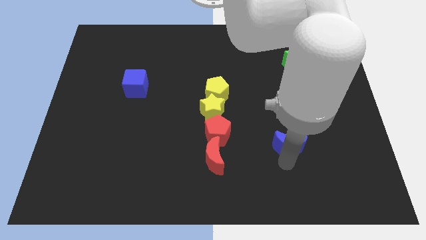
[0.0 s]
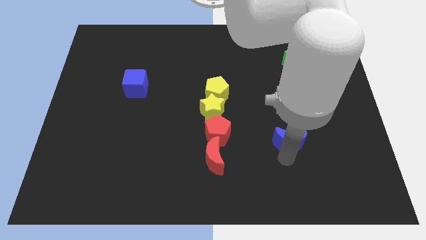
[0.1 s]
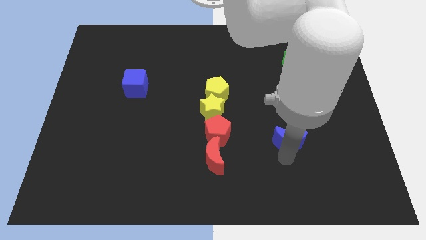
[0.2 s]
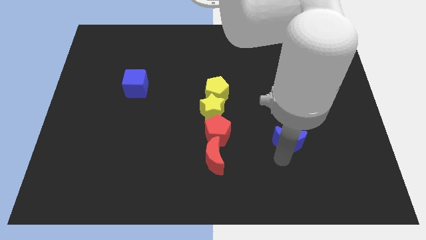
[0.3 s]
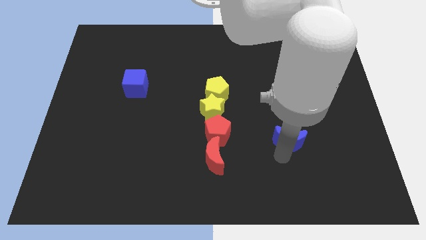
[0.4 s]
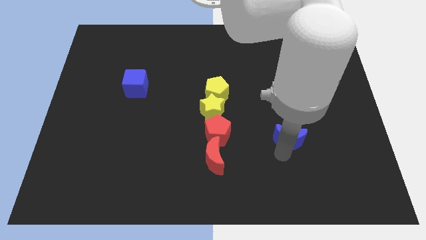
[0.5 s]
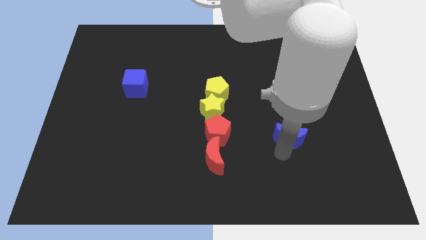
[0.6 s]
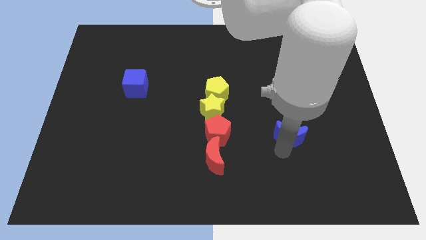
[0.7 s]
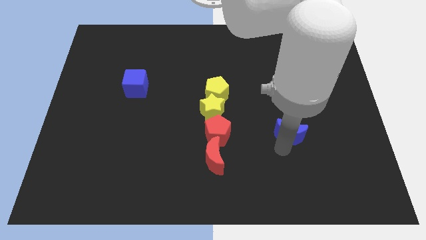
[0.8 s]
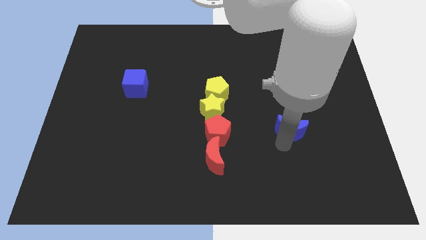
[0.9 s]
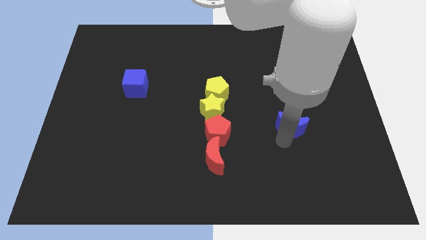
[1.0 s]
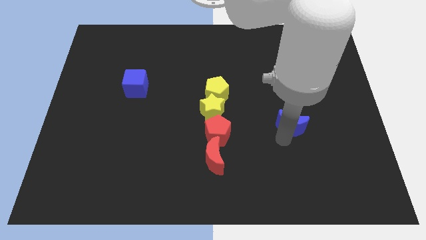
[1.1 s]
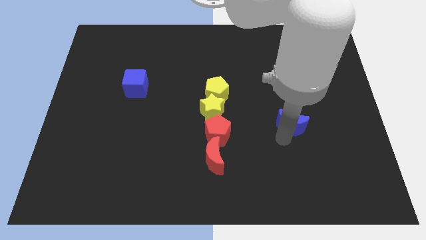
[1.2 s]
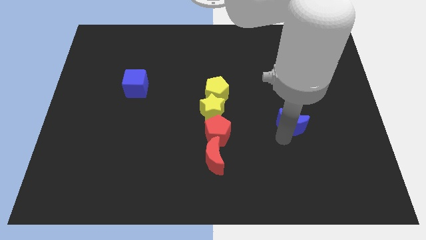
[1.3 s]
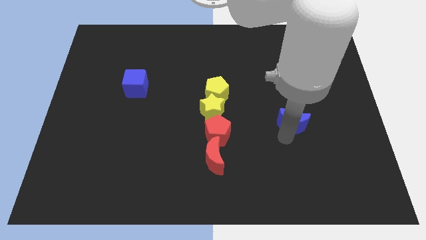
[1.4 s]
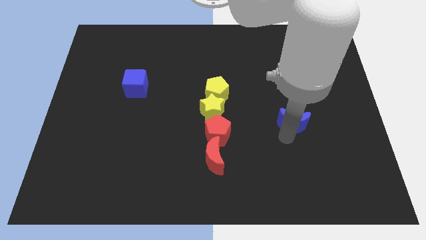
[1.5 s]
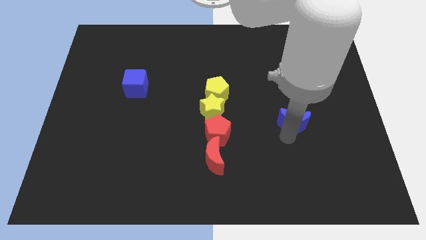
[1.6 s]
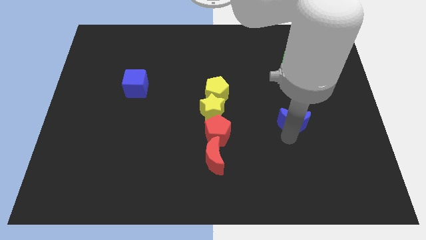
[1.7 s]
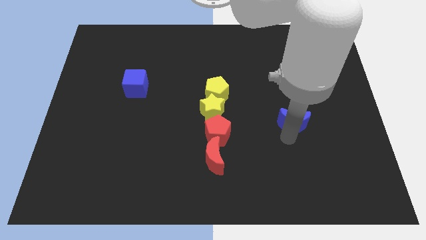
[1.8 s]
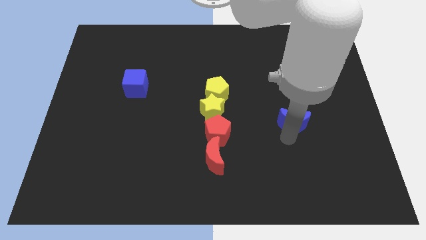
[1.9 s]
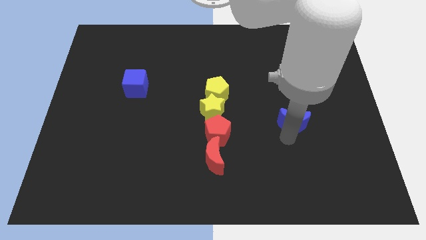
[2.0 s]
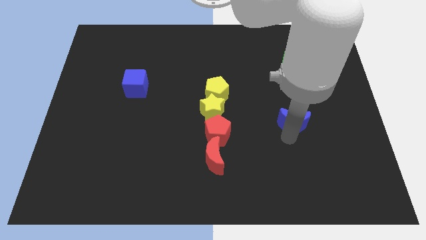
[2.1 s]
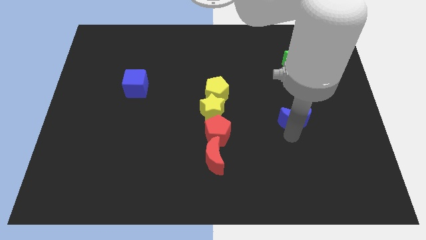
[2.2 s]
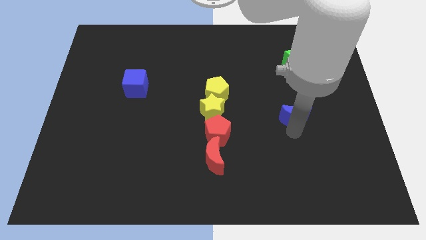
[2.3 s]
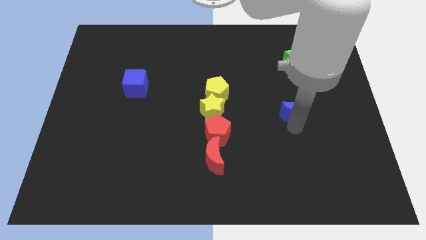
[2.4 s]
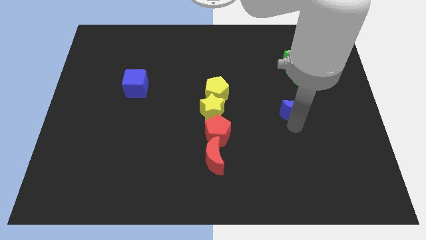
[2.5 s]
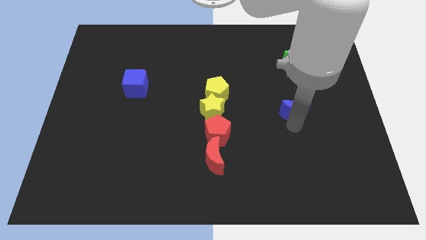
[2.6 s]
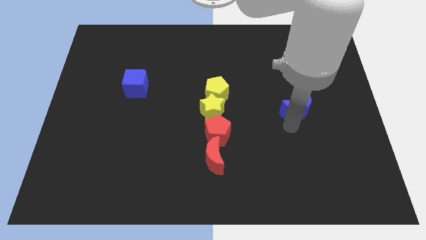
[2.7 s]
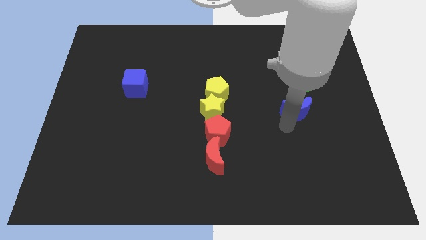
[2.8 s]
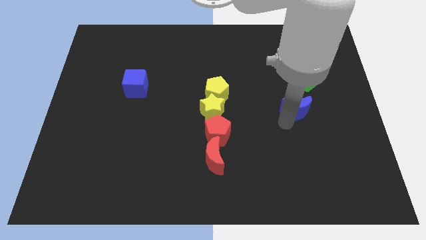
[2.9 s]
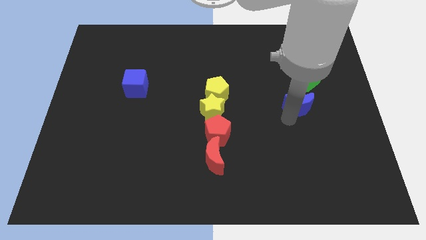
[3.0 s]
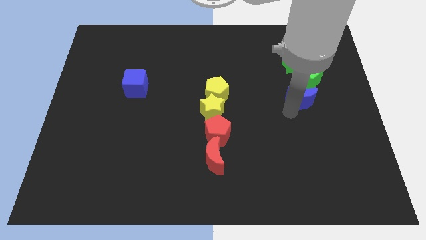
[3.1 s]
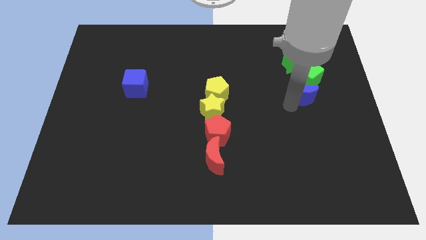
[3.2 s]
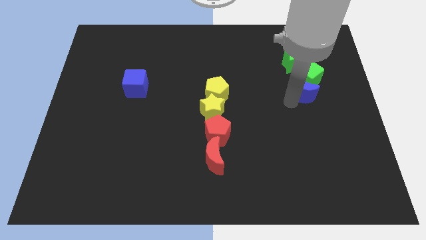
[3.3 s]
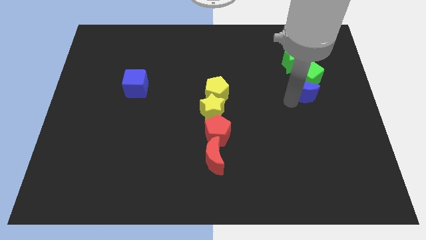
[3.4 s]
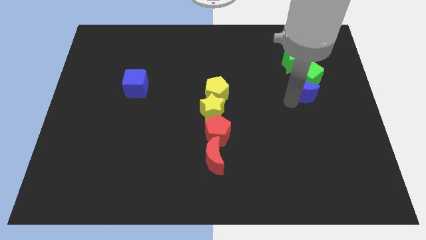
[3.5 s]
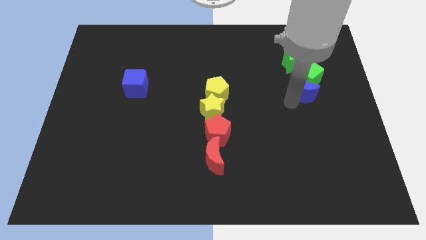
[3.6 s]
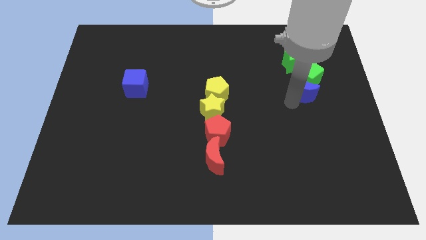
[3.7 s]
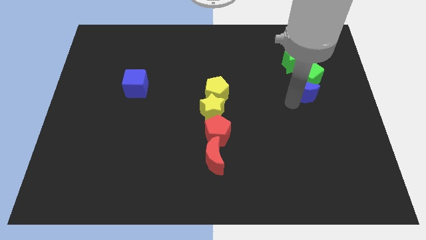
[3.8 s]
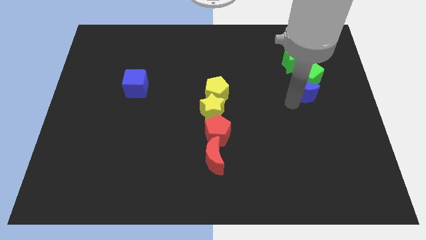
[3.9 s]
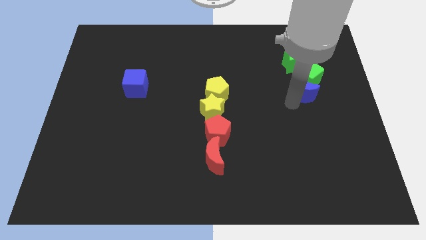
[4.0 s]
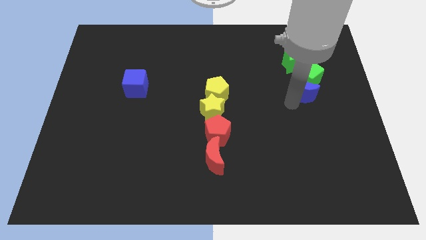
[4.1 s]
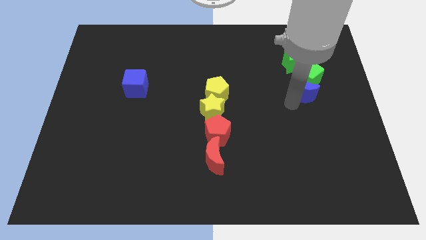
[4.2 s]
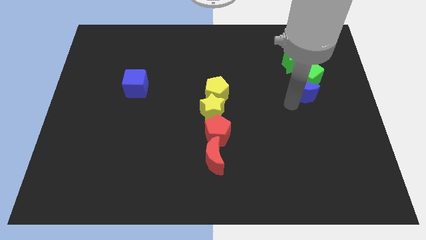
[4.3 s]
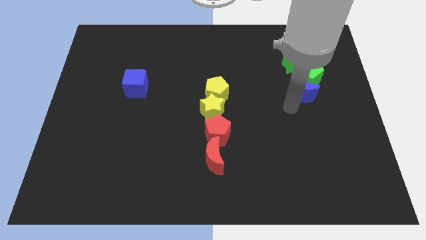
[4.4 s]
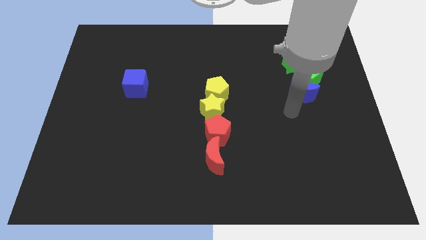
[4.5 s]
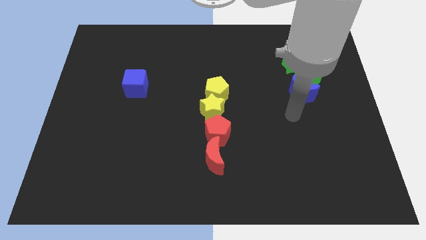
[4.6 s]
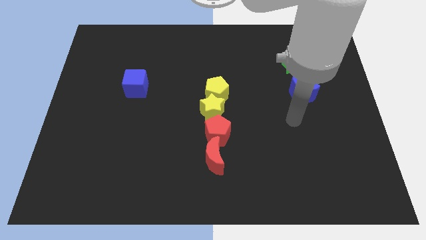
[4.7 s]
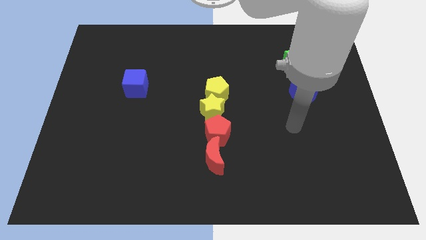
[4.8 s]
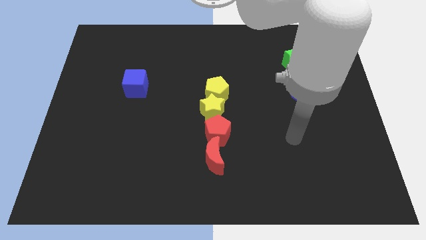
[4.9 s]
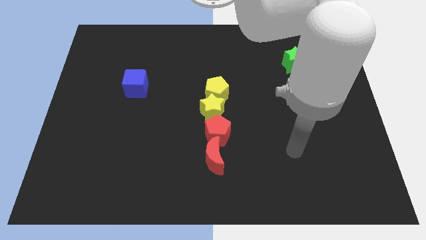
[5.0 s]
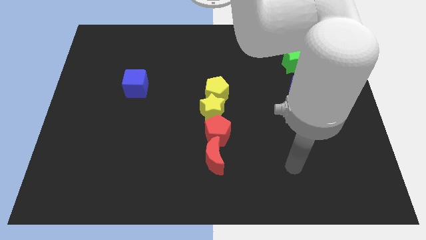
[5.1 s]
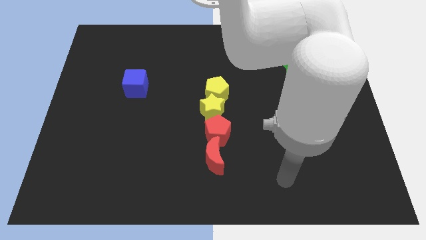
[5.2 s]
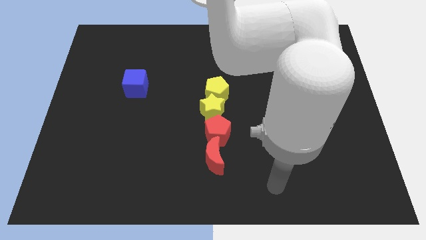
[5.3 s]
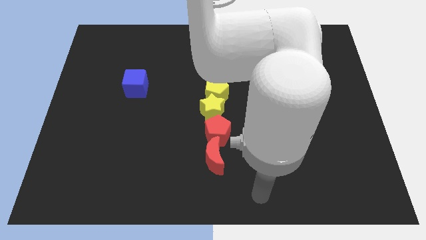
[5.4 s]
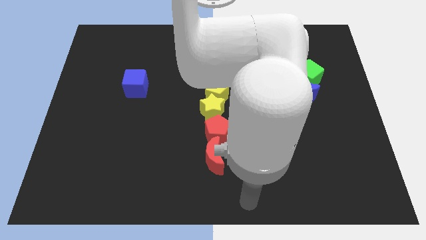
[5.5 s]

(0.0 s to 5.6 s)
push the blue crescent towards the green cube on the right center of the board

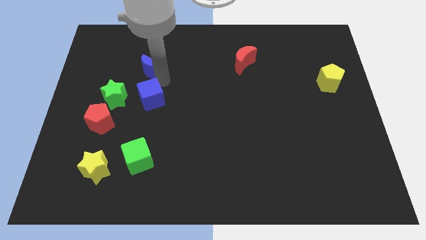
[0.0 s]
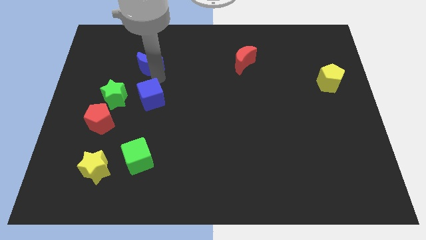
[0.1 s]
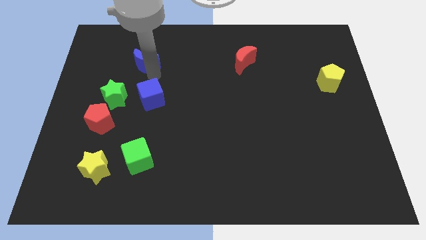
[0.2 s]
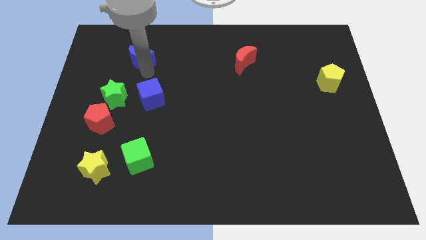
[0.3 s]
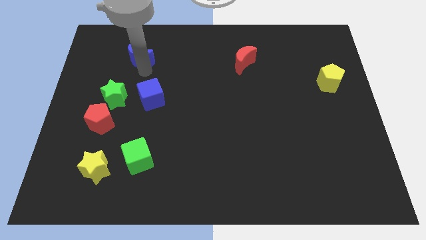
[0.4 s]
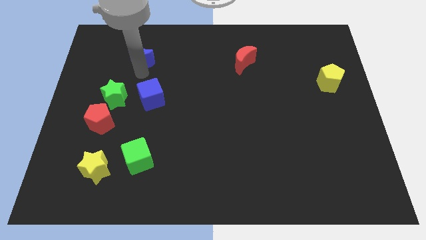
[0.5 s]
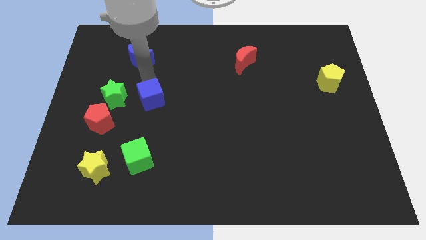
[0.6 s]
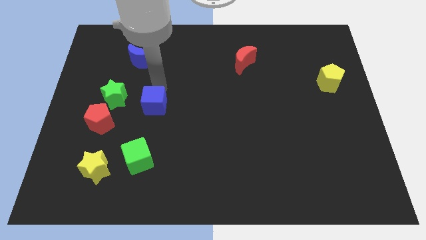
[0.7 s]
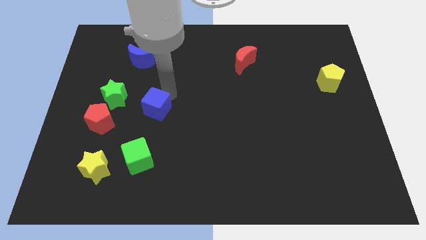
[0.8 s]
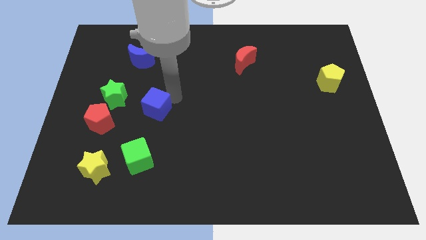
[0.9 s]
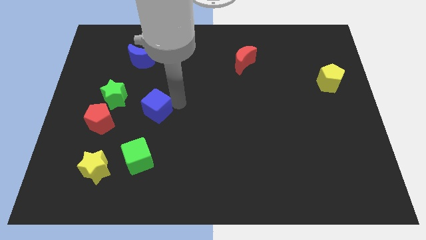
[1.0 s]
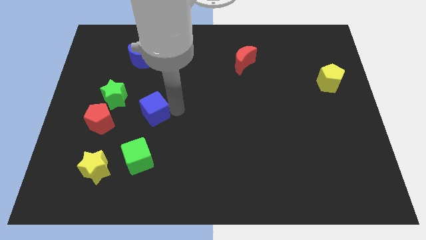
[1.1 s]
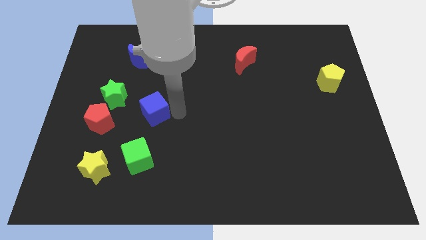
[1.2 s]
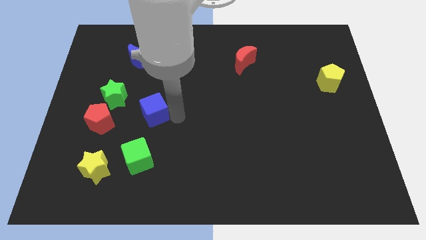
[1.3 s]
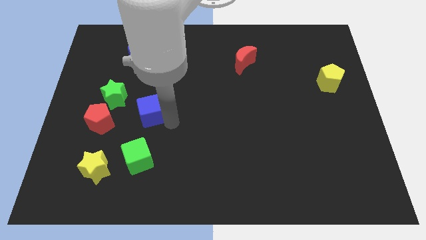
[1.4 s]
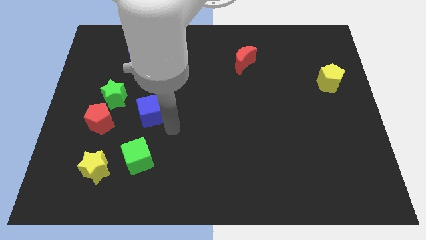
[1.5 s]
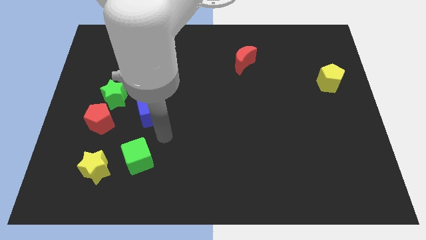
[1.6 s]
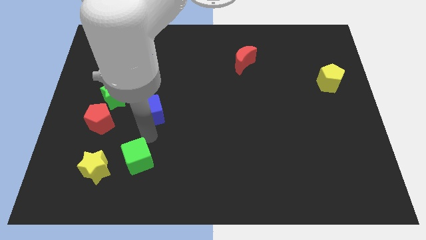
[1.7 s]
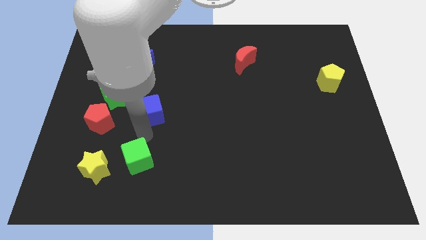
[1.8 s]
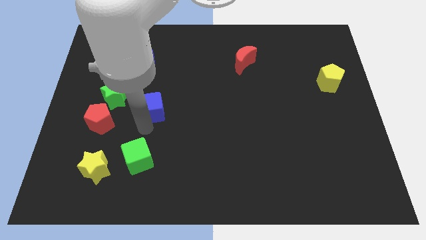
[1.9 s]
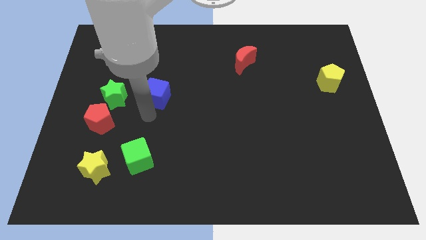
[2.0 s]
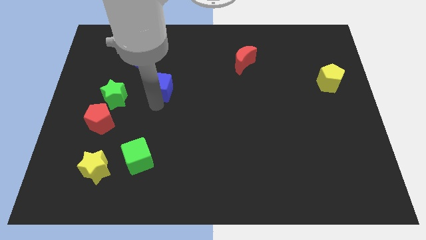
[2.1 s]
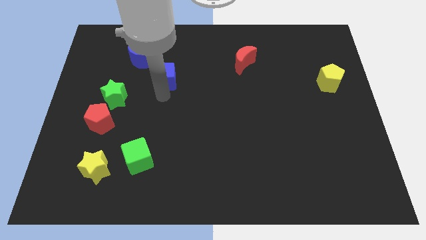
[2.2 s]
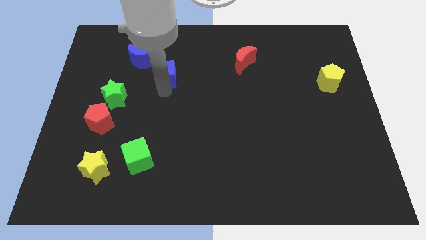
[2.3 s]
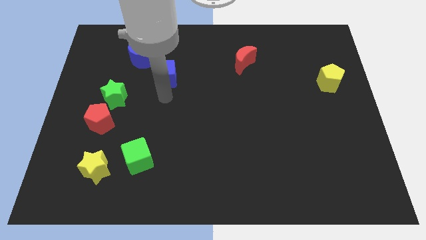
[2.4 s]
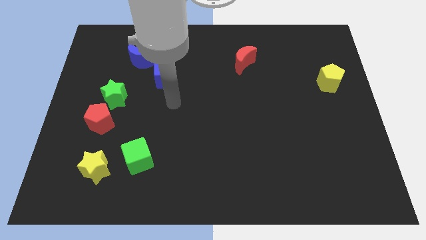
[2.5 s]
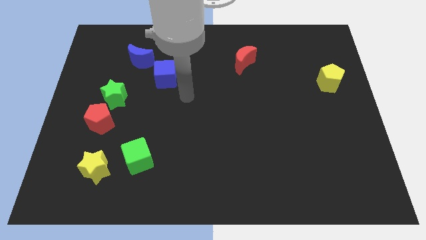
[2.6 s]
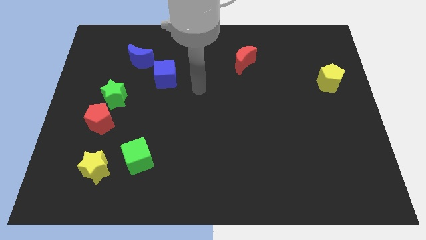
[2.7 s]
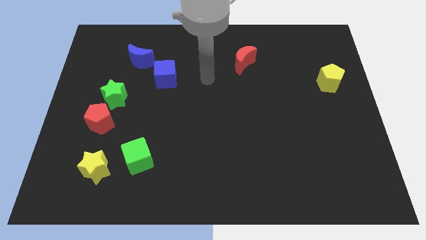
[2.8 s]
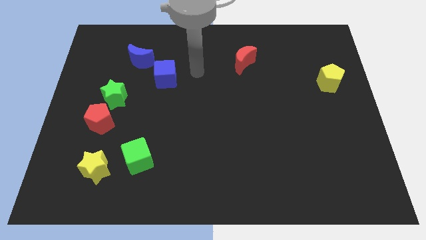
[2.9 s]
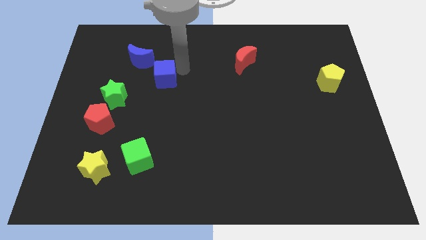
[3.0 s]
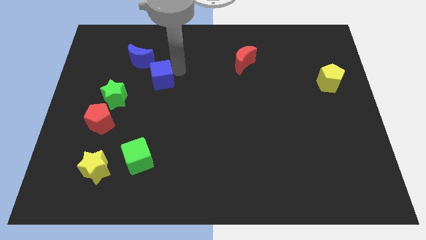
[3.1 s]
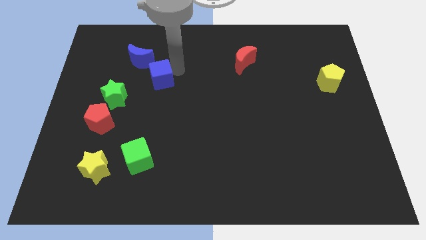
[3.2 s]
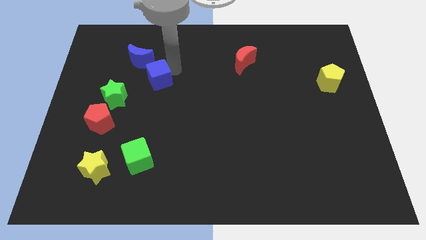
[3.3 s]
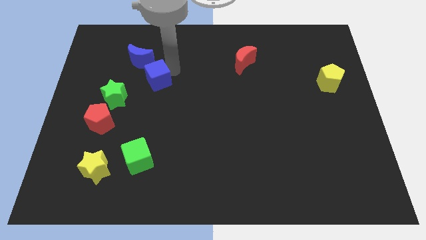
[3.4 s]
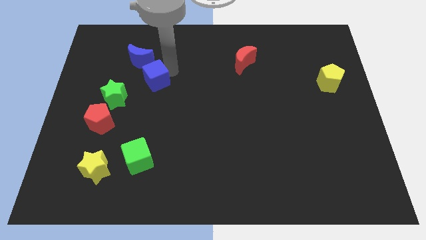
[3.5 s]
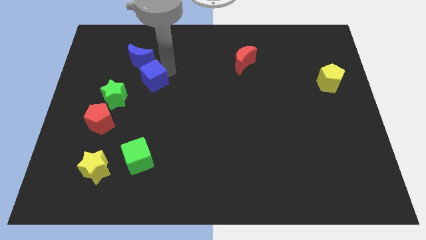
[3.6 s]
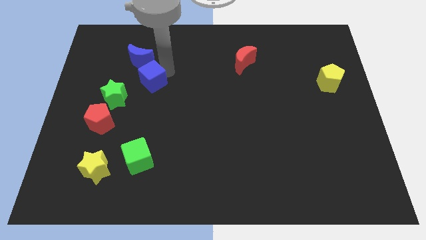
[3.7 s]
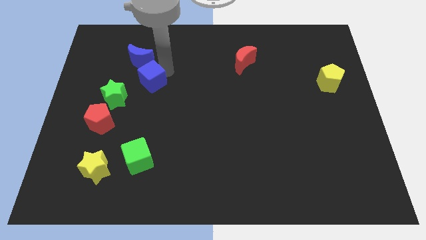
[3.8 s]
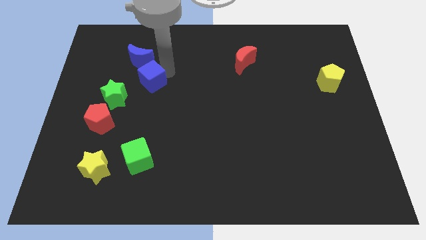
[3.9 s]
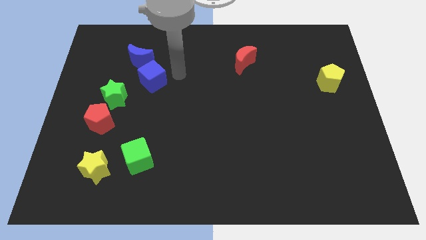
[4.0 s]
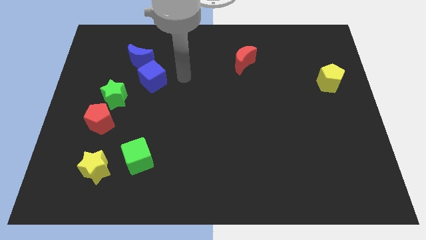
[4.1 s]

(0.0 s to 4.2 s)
move the blue cube towards the bottom of the blue crescent
